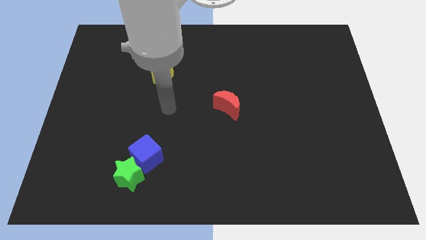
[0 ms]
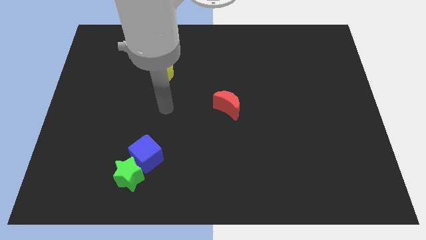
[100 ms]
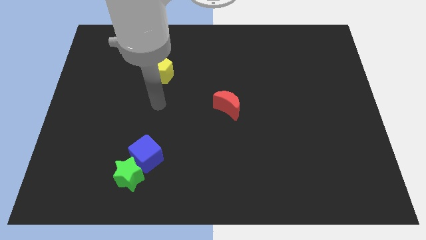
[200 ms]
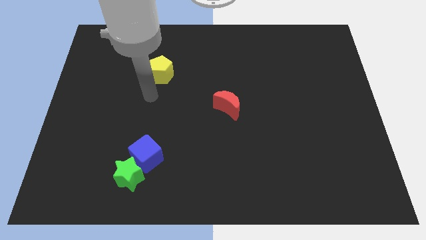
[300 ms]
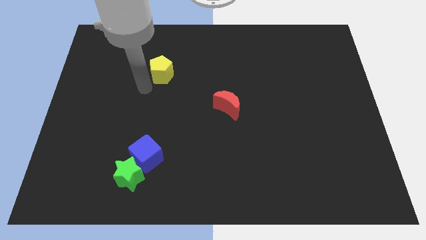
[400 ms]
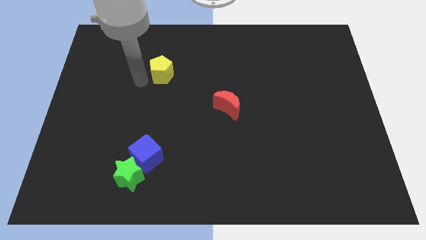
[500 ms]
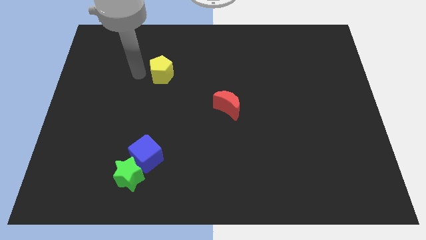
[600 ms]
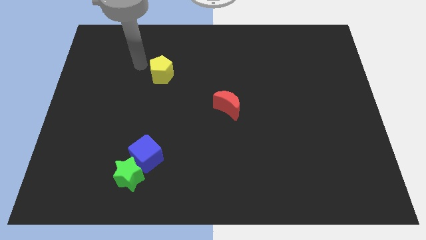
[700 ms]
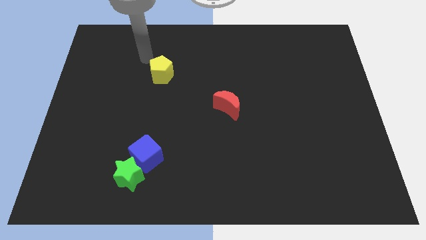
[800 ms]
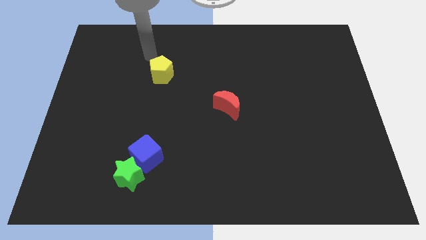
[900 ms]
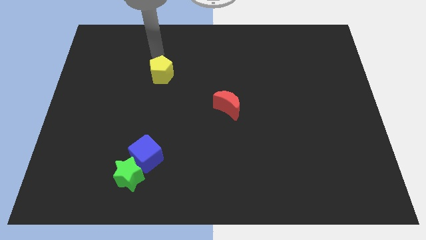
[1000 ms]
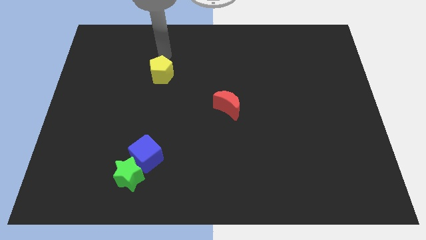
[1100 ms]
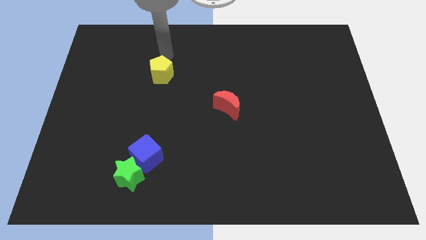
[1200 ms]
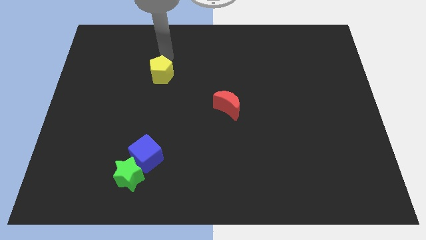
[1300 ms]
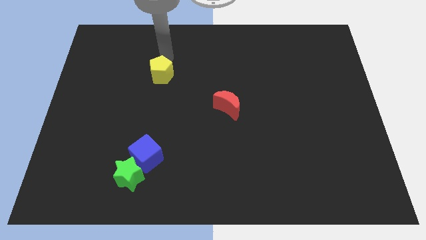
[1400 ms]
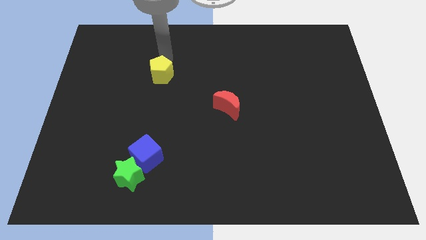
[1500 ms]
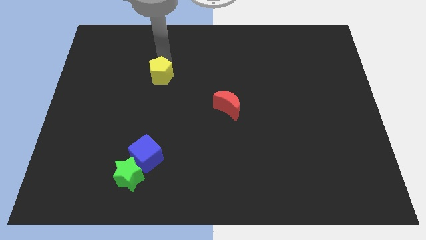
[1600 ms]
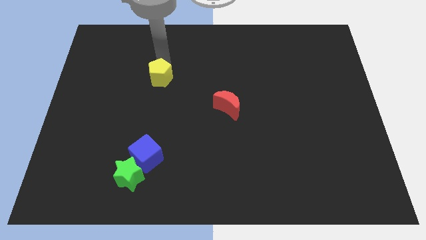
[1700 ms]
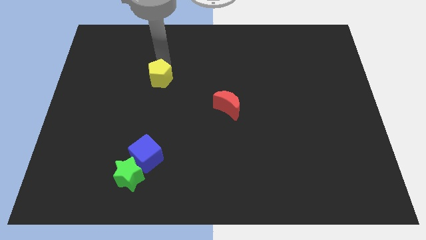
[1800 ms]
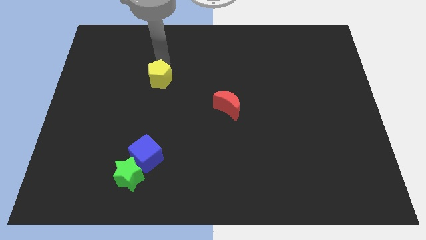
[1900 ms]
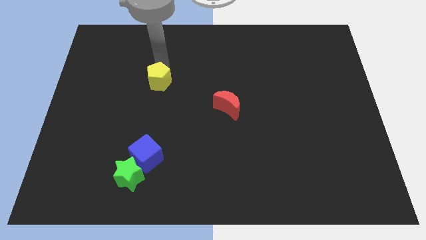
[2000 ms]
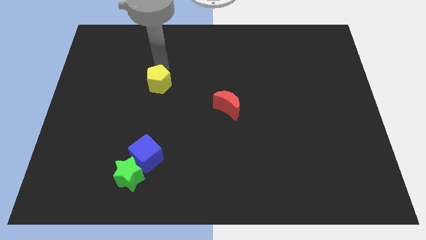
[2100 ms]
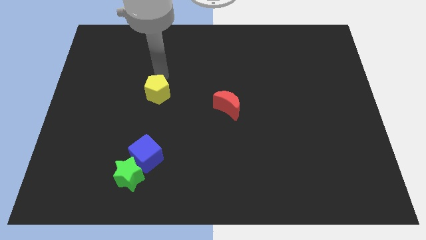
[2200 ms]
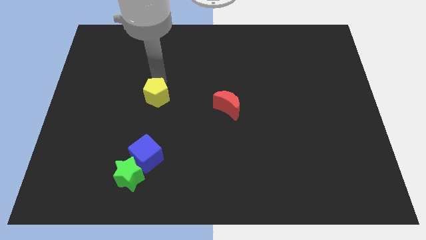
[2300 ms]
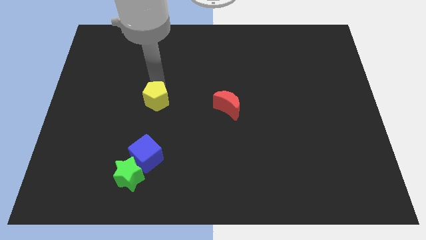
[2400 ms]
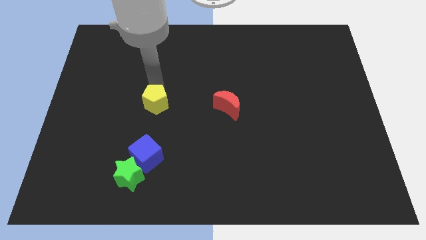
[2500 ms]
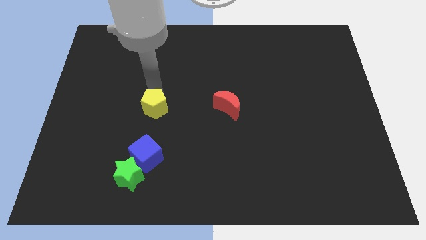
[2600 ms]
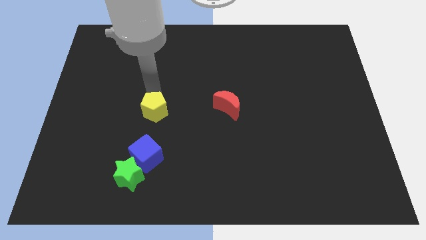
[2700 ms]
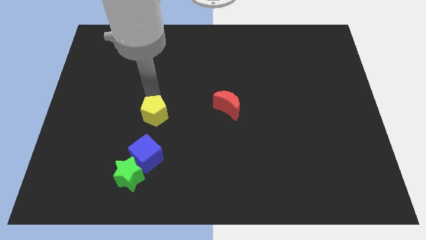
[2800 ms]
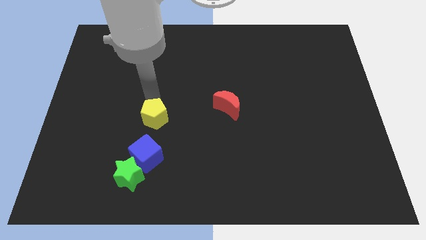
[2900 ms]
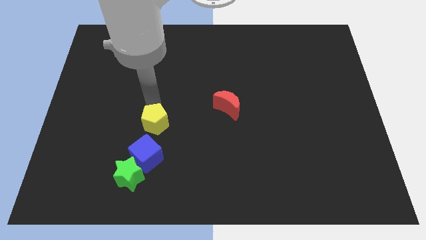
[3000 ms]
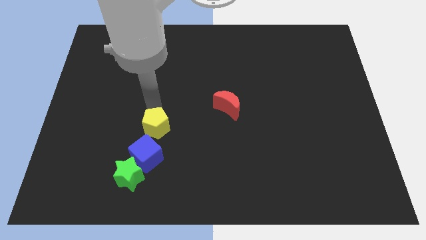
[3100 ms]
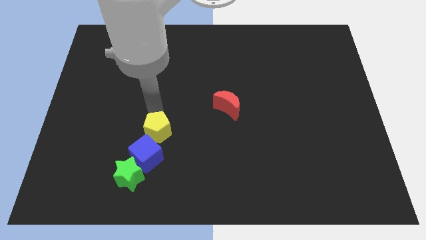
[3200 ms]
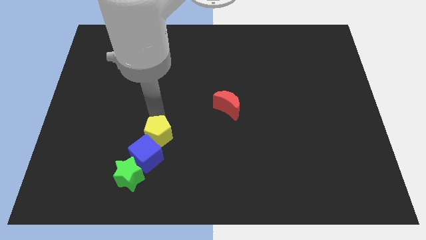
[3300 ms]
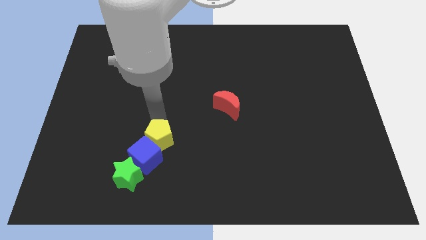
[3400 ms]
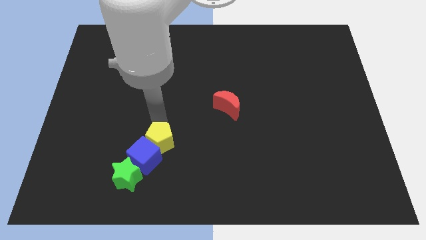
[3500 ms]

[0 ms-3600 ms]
push the yellow pentagon close to the blue cube

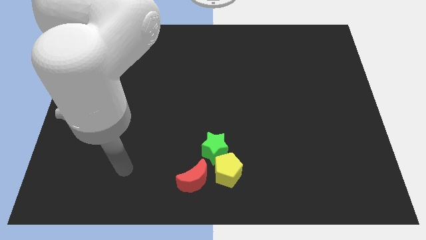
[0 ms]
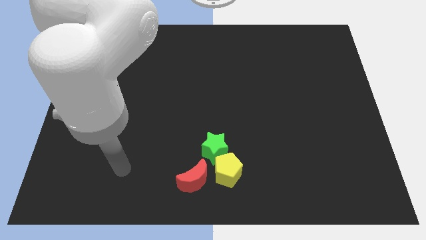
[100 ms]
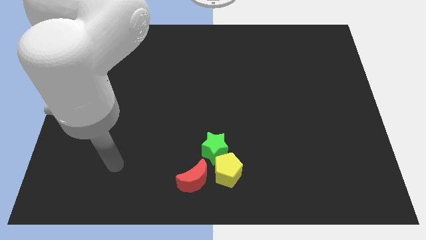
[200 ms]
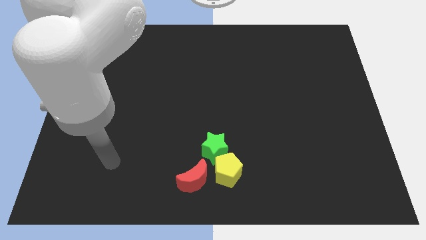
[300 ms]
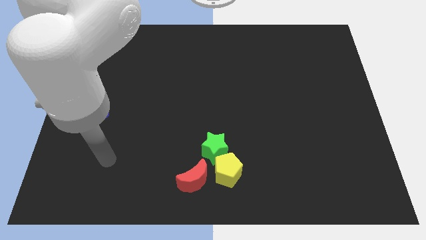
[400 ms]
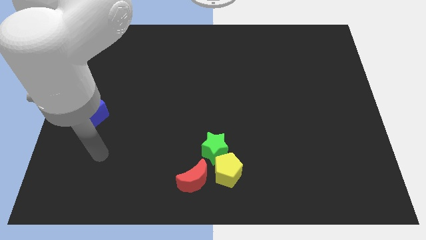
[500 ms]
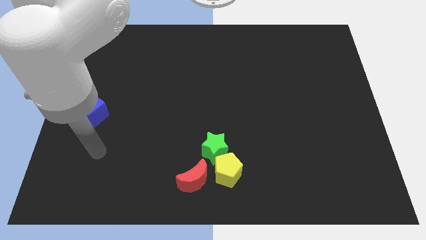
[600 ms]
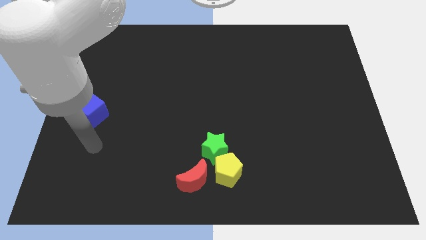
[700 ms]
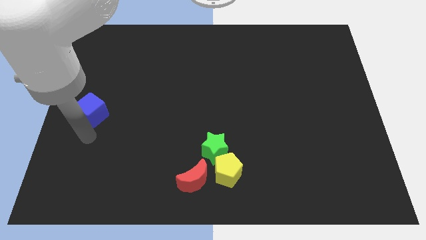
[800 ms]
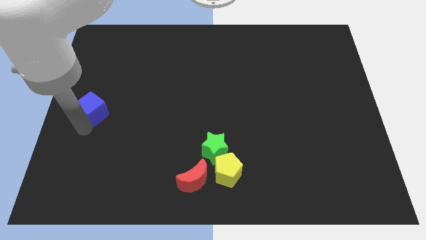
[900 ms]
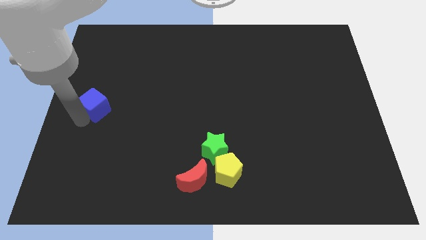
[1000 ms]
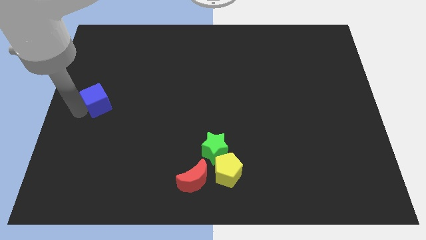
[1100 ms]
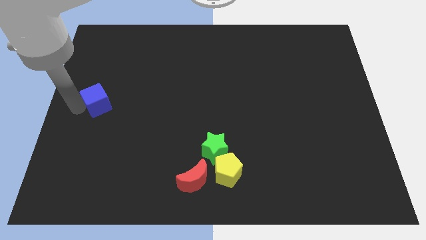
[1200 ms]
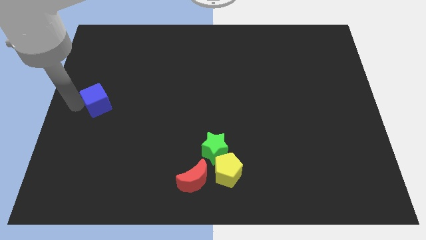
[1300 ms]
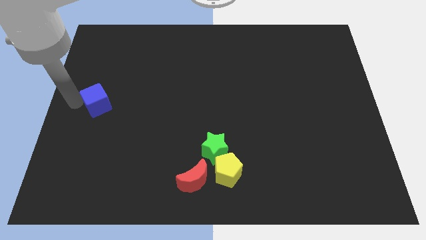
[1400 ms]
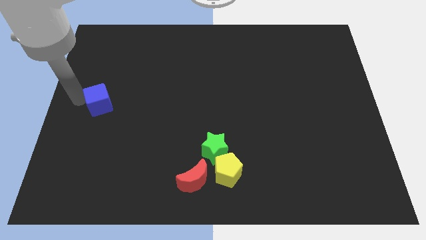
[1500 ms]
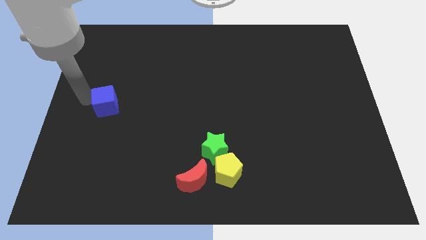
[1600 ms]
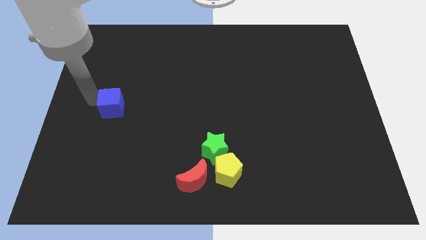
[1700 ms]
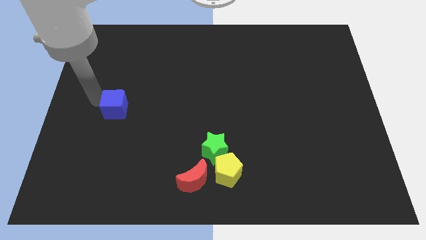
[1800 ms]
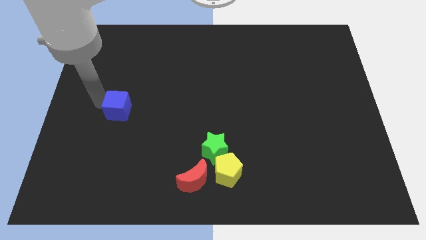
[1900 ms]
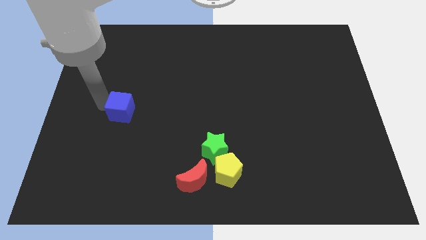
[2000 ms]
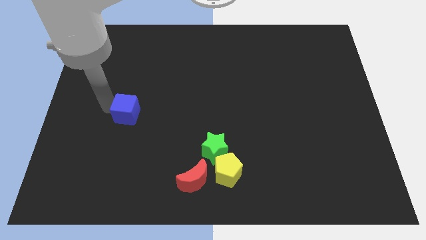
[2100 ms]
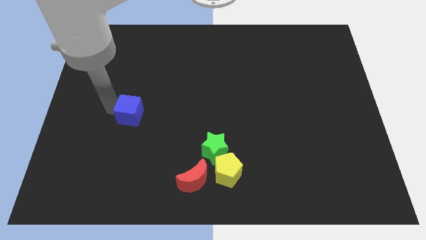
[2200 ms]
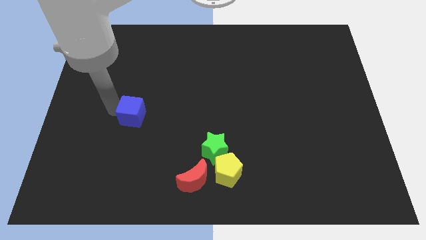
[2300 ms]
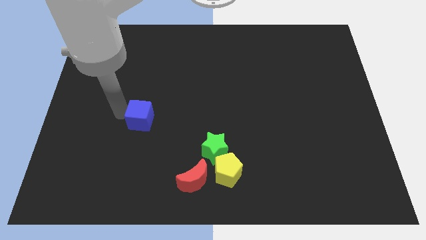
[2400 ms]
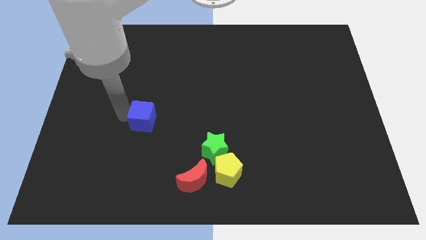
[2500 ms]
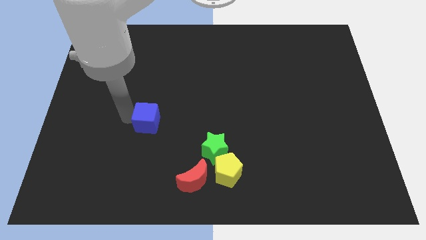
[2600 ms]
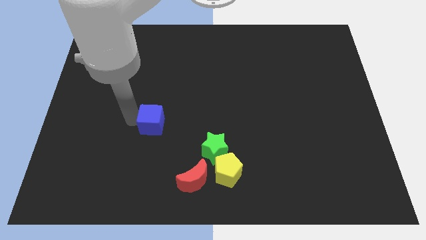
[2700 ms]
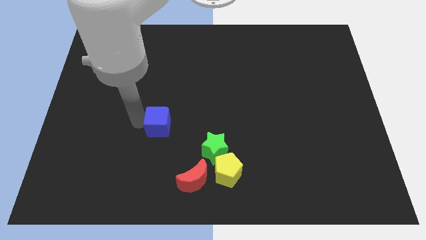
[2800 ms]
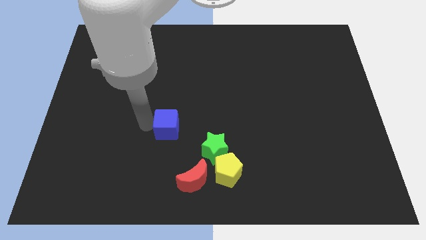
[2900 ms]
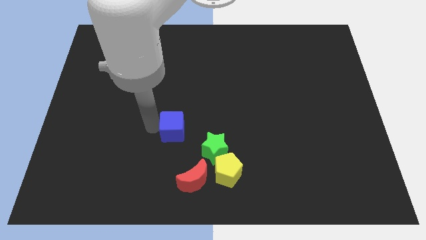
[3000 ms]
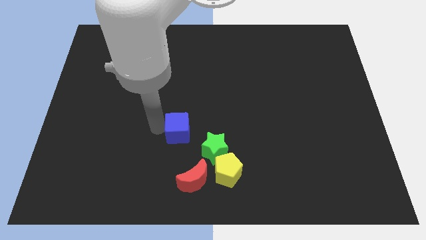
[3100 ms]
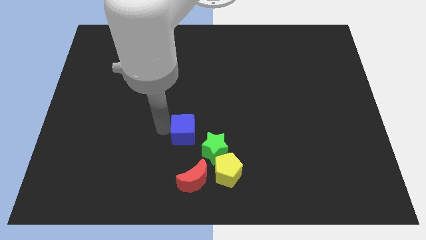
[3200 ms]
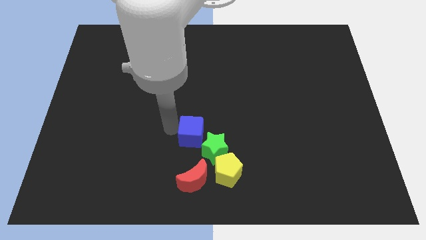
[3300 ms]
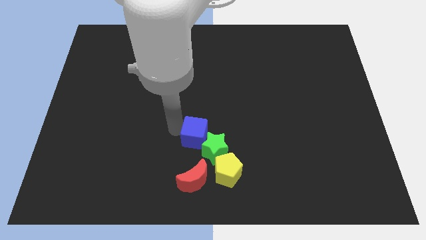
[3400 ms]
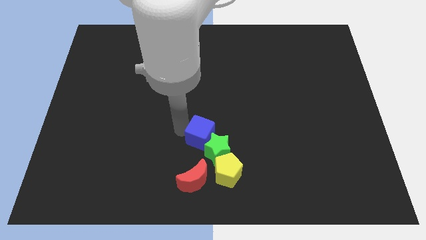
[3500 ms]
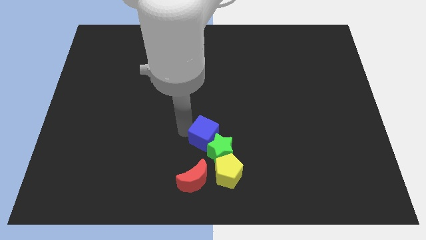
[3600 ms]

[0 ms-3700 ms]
slide the cube close to the star

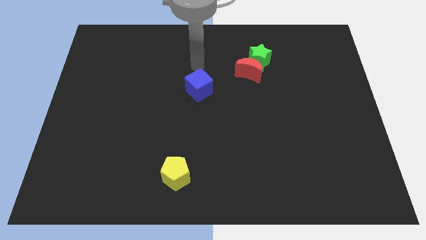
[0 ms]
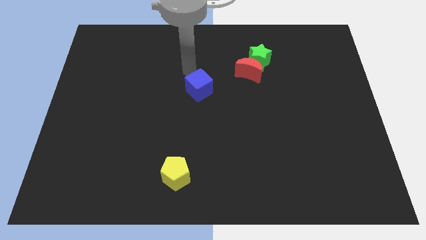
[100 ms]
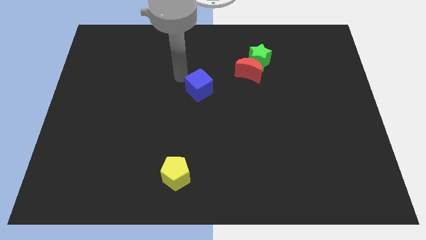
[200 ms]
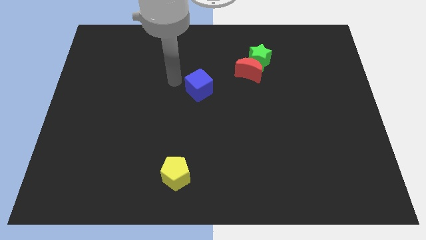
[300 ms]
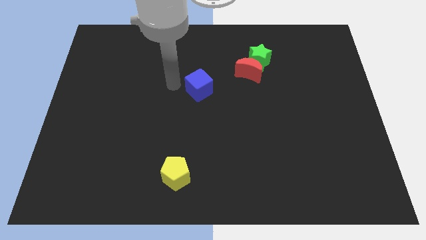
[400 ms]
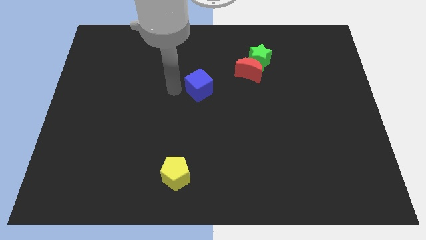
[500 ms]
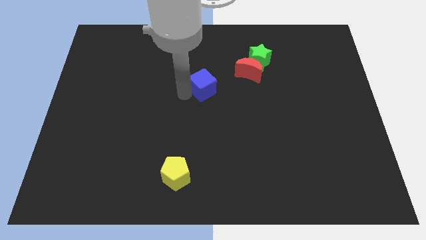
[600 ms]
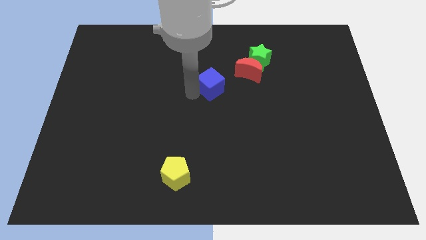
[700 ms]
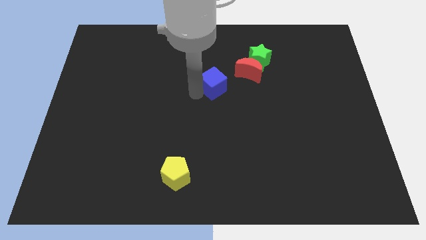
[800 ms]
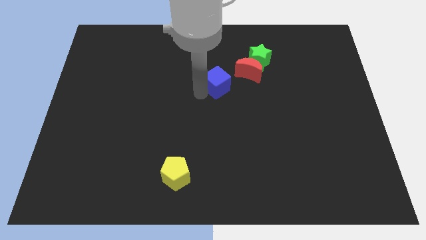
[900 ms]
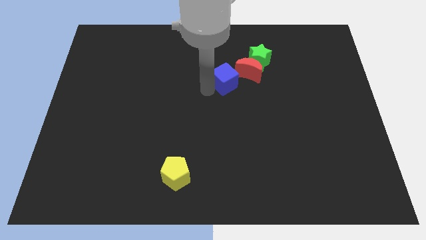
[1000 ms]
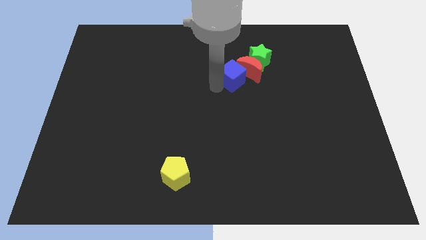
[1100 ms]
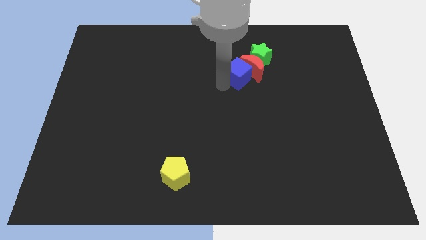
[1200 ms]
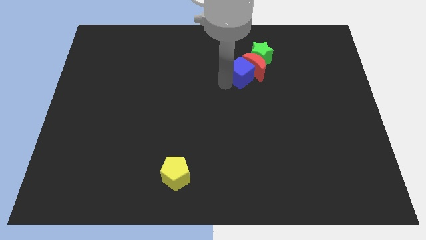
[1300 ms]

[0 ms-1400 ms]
push the blue block towards the red block
